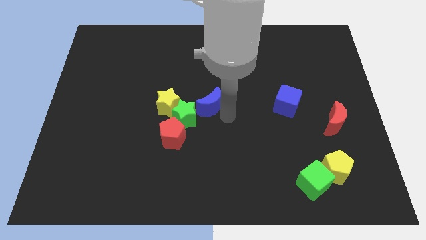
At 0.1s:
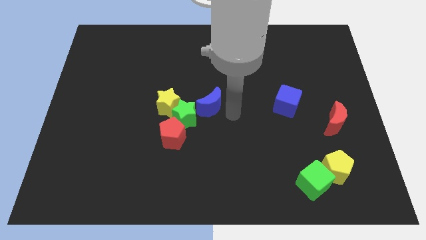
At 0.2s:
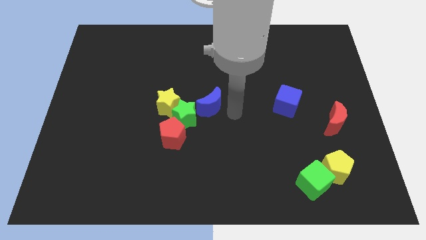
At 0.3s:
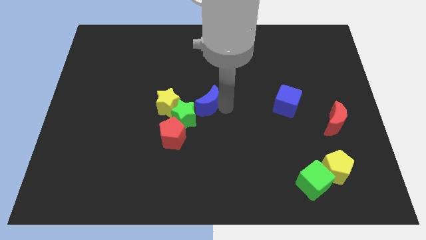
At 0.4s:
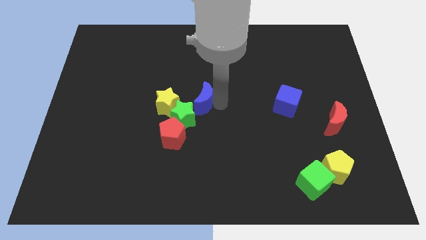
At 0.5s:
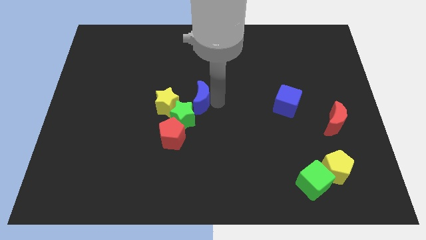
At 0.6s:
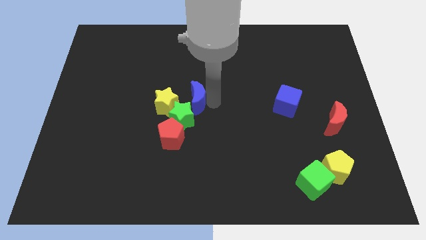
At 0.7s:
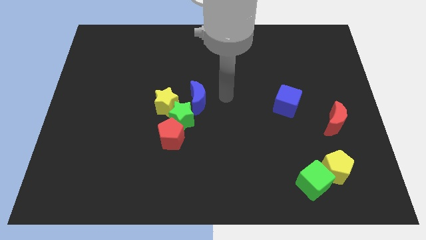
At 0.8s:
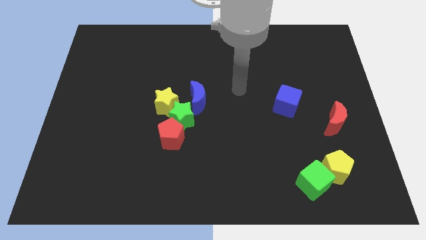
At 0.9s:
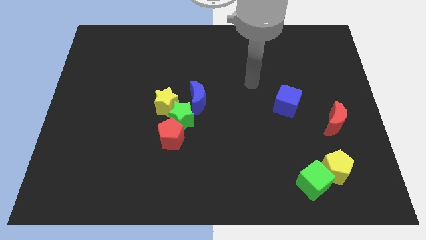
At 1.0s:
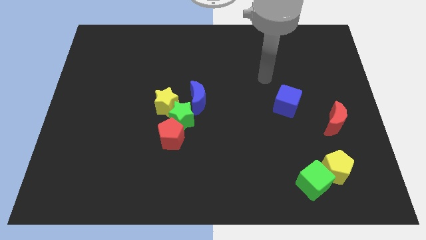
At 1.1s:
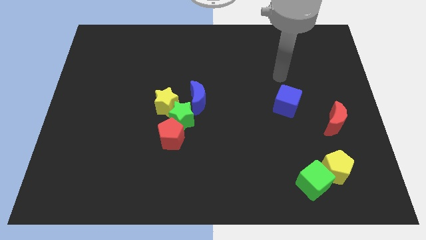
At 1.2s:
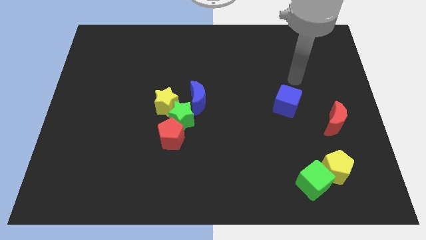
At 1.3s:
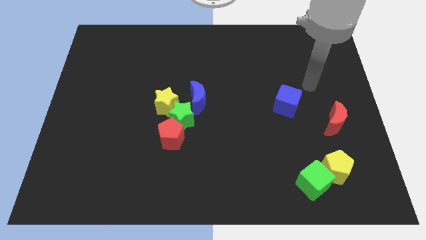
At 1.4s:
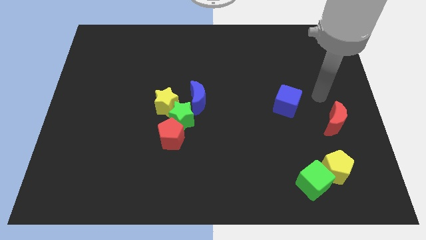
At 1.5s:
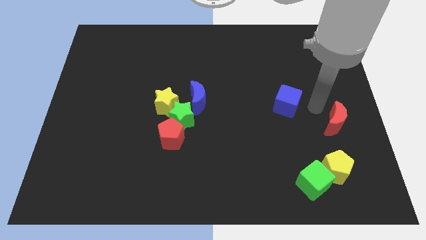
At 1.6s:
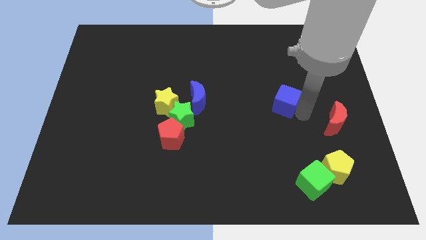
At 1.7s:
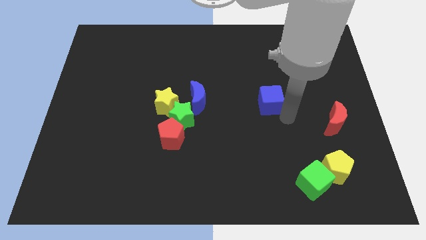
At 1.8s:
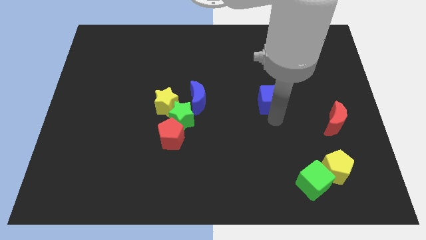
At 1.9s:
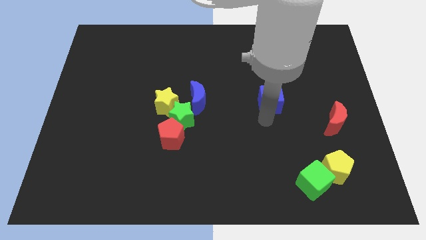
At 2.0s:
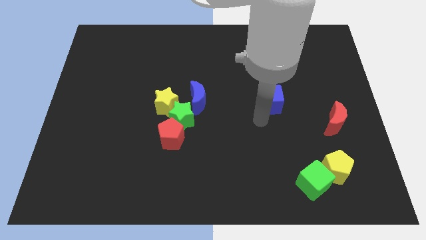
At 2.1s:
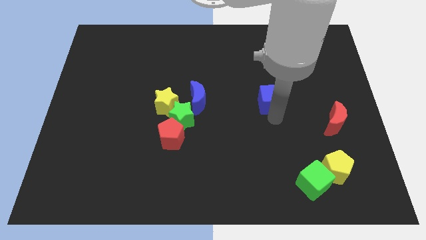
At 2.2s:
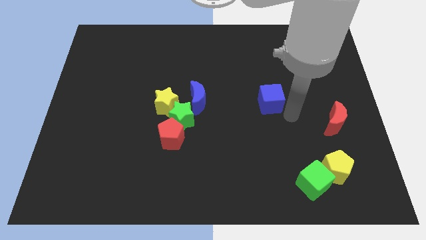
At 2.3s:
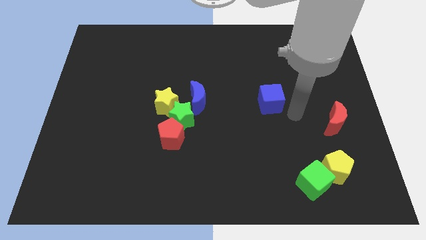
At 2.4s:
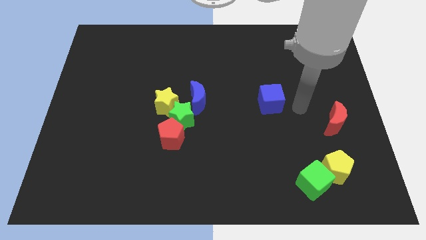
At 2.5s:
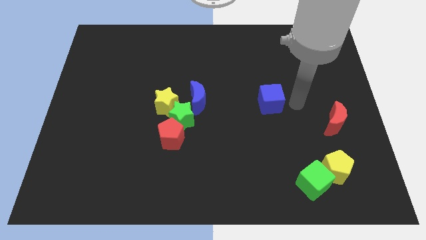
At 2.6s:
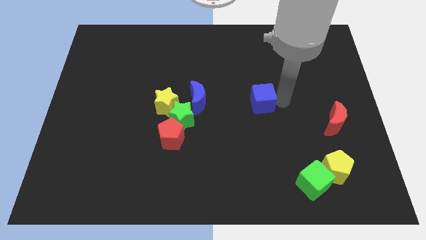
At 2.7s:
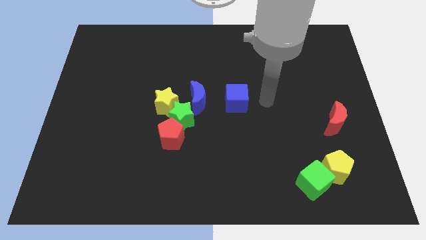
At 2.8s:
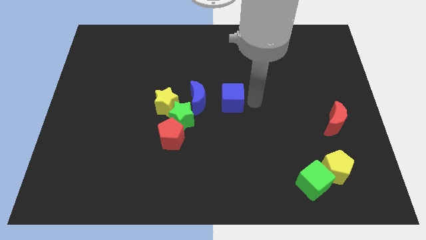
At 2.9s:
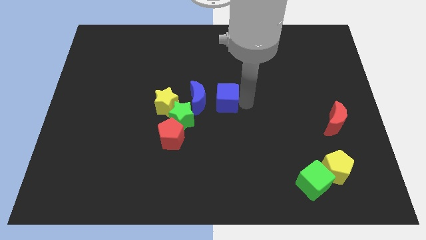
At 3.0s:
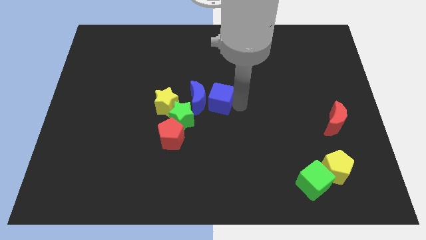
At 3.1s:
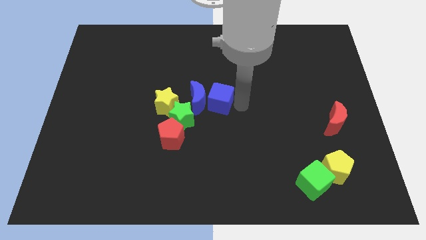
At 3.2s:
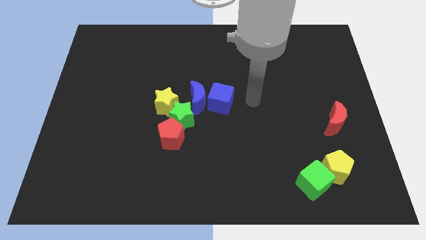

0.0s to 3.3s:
push the blue moon and the blue cube to the center

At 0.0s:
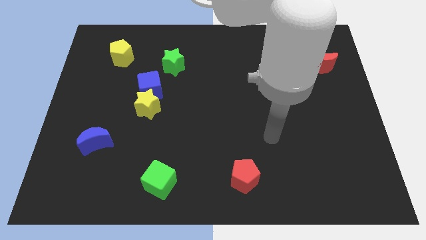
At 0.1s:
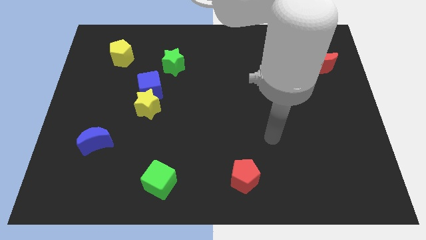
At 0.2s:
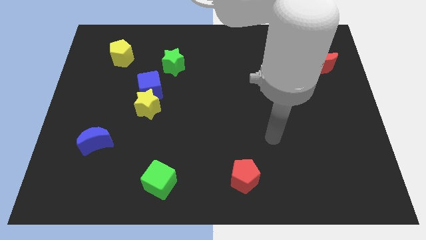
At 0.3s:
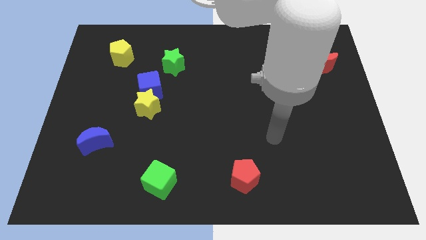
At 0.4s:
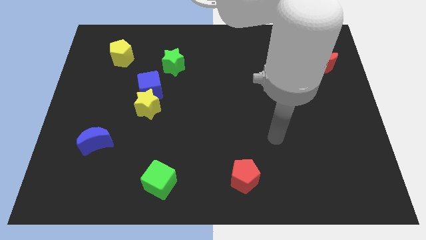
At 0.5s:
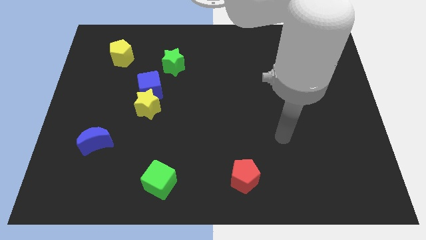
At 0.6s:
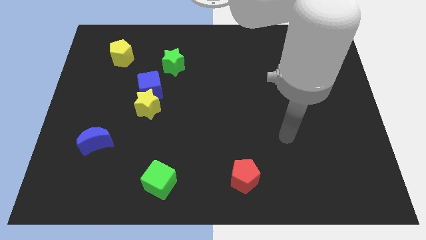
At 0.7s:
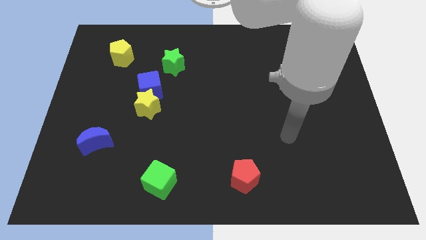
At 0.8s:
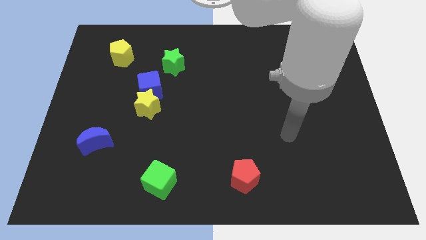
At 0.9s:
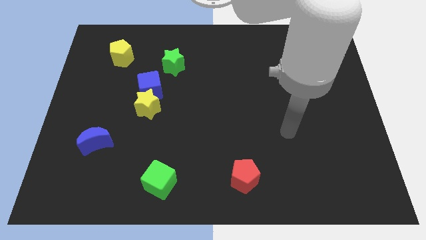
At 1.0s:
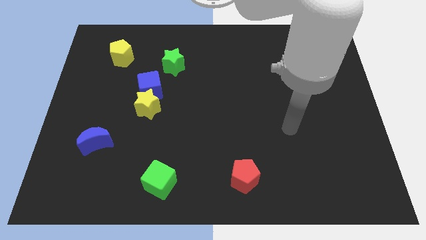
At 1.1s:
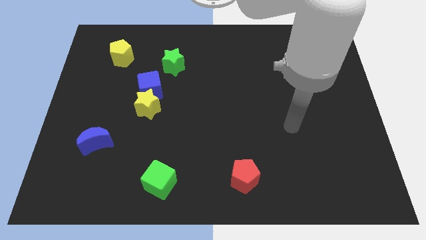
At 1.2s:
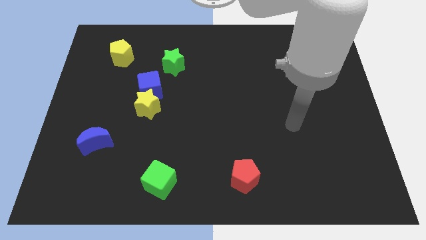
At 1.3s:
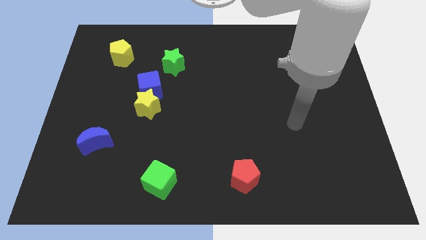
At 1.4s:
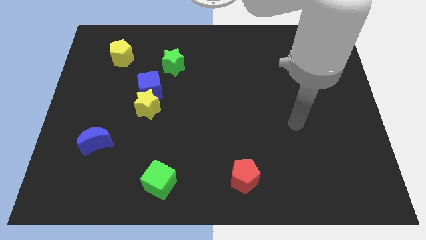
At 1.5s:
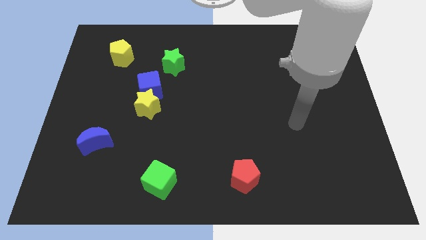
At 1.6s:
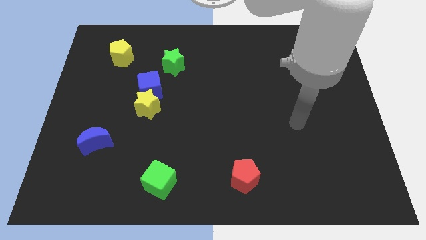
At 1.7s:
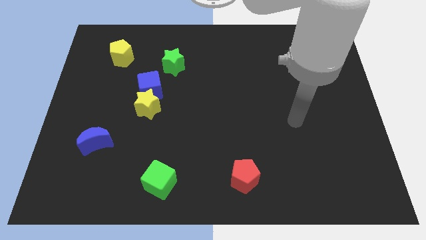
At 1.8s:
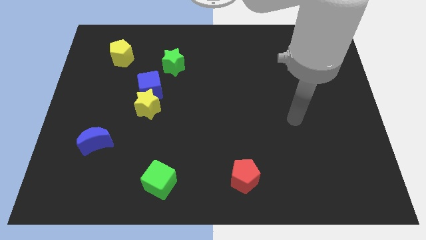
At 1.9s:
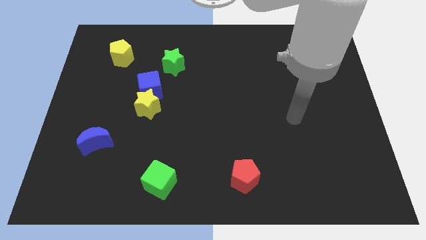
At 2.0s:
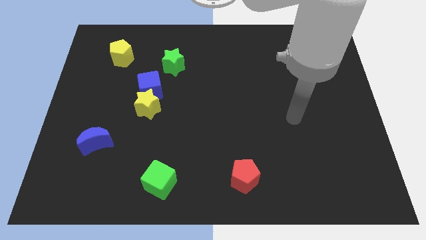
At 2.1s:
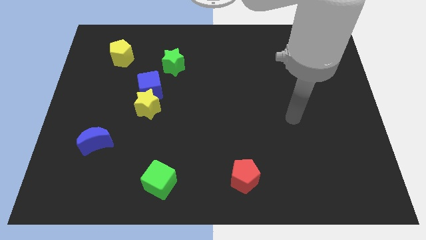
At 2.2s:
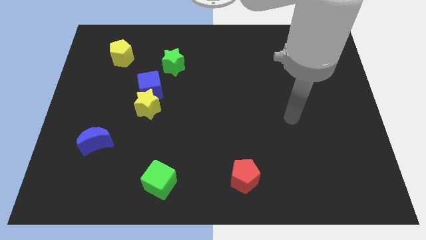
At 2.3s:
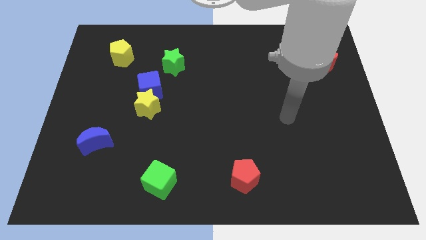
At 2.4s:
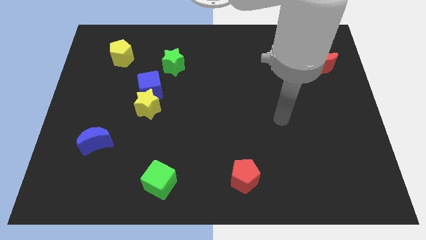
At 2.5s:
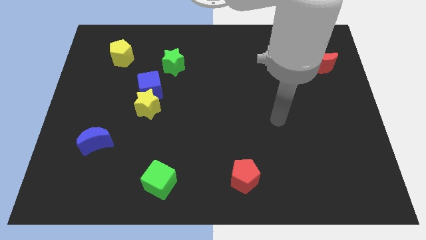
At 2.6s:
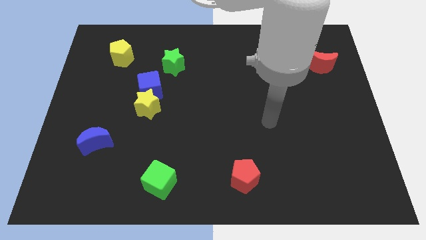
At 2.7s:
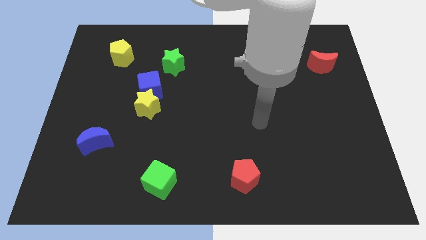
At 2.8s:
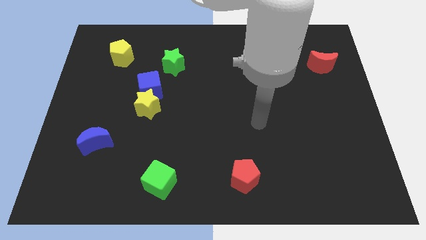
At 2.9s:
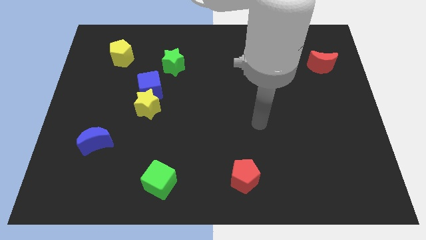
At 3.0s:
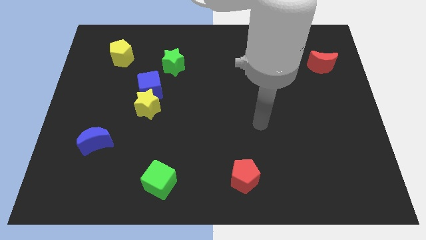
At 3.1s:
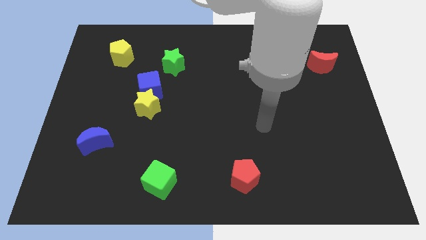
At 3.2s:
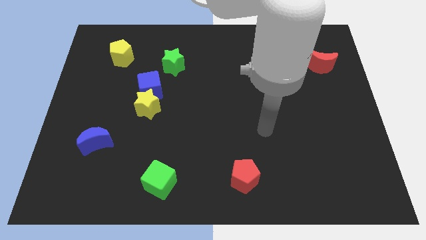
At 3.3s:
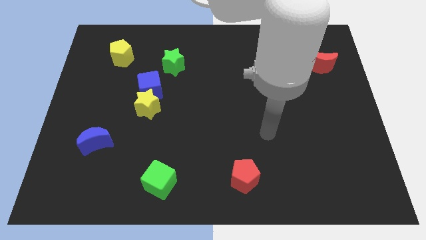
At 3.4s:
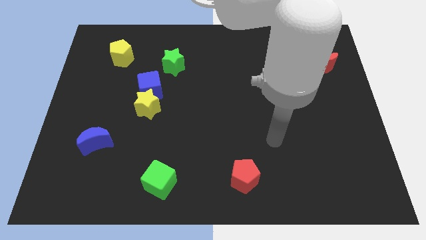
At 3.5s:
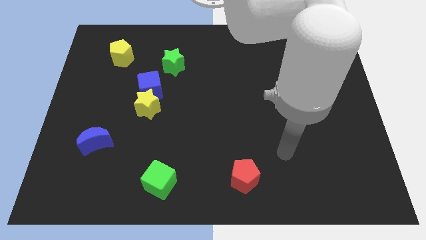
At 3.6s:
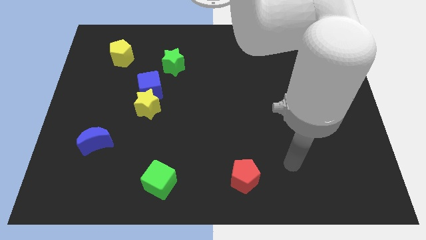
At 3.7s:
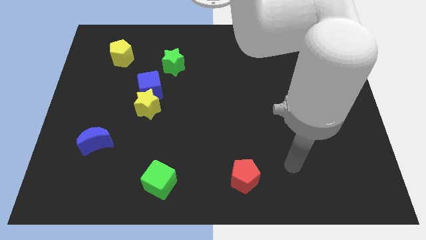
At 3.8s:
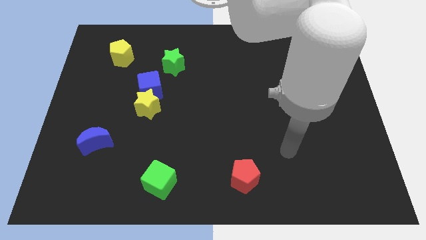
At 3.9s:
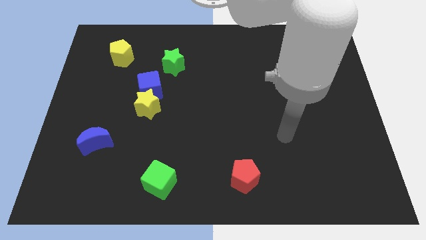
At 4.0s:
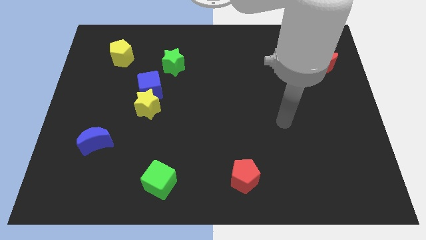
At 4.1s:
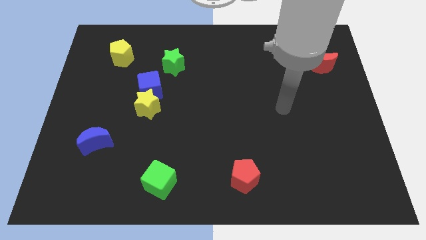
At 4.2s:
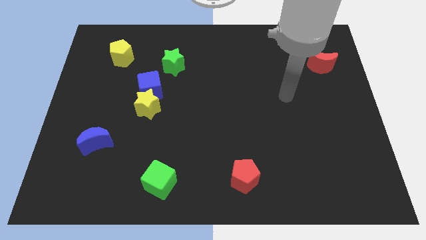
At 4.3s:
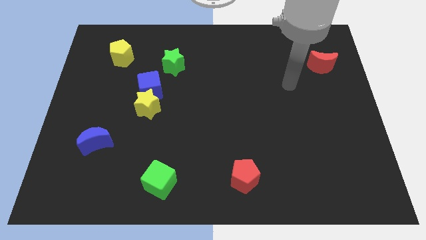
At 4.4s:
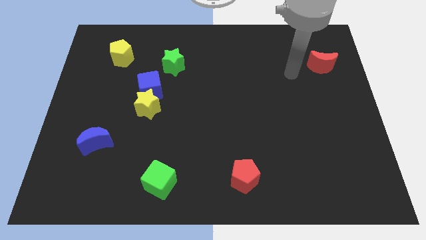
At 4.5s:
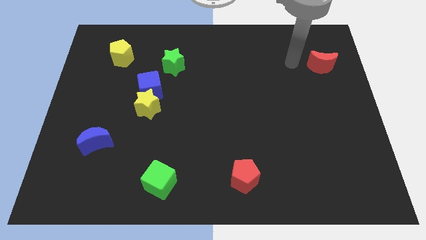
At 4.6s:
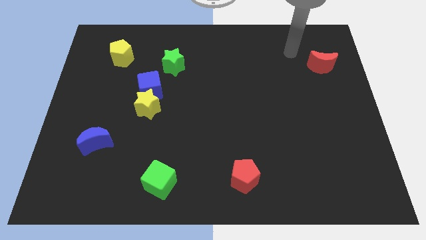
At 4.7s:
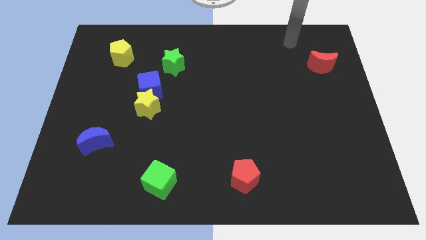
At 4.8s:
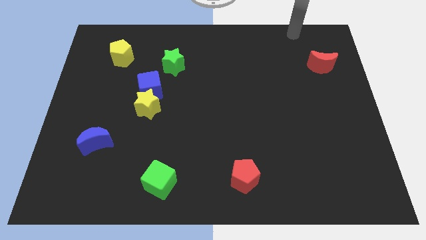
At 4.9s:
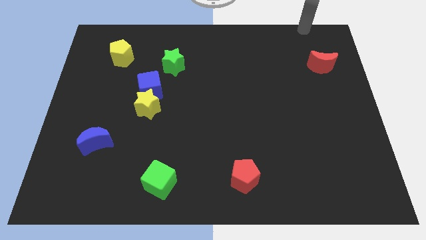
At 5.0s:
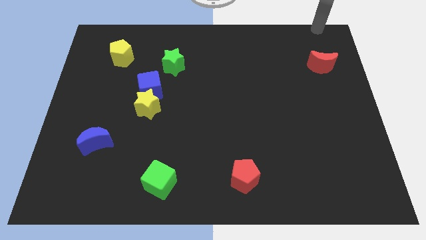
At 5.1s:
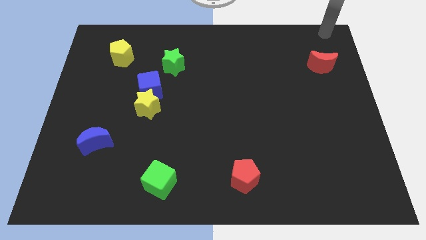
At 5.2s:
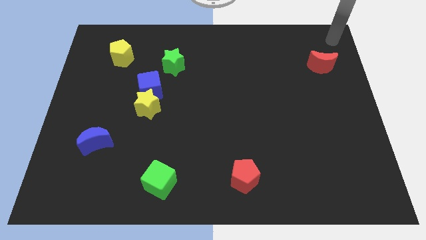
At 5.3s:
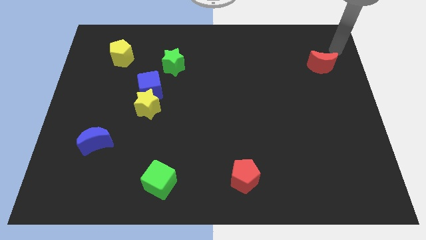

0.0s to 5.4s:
move your arm around on the board

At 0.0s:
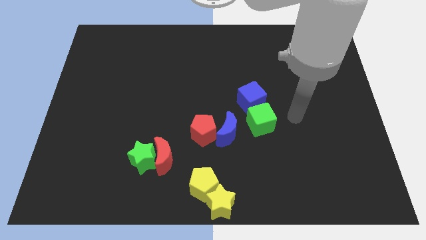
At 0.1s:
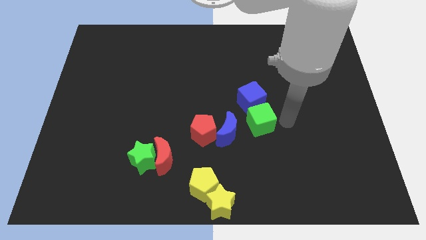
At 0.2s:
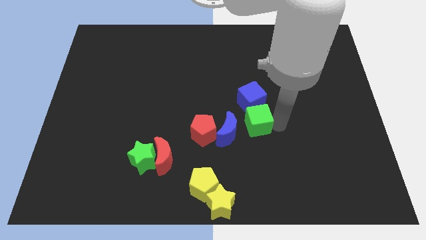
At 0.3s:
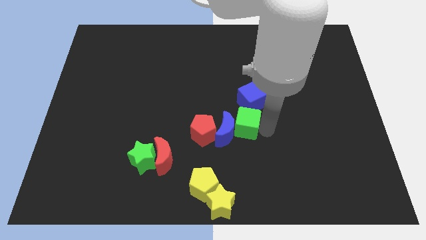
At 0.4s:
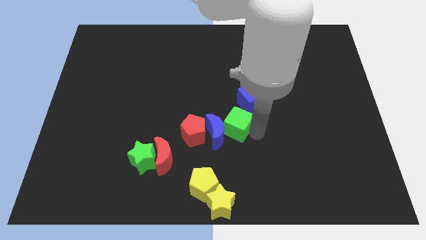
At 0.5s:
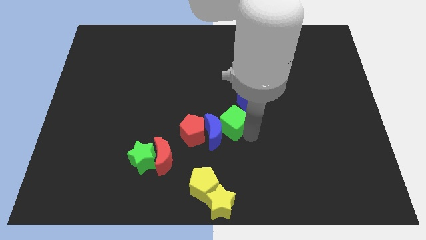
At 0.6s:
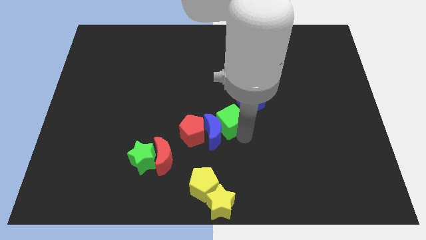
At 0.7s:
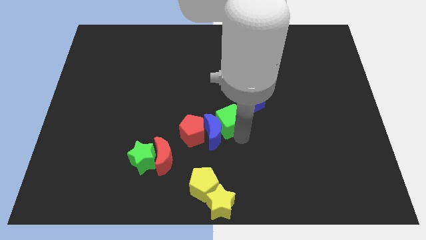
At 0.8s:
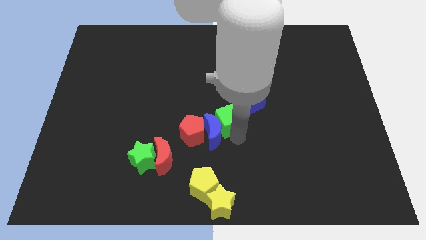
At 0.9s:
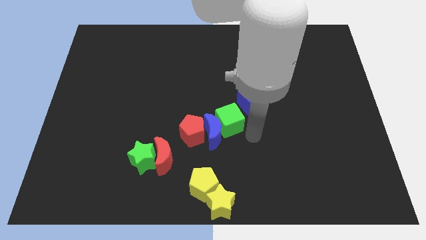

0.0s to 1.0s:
move the green cube into red crescent
